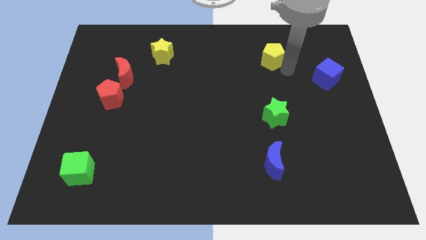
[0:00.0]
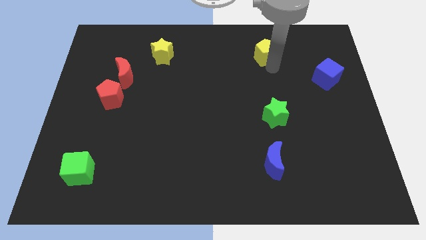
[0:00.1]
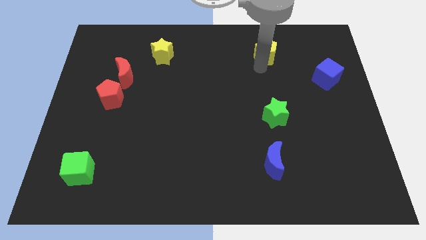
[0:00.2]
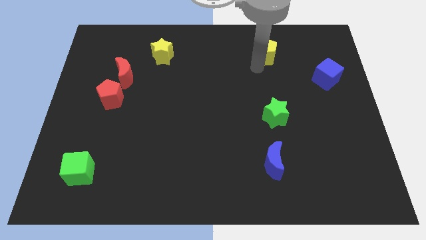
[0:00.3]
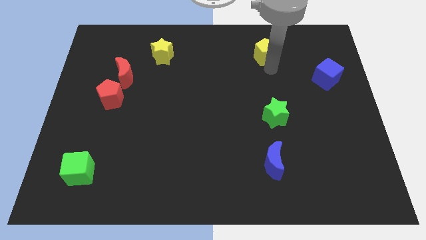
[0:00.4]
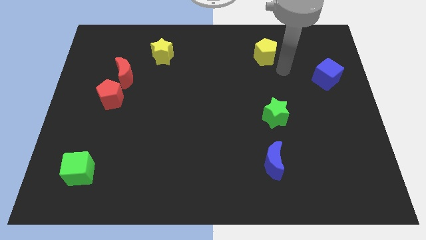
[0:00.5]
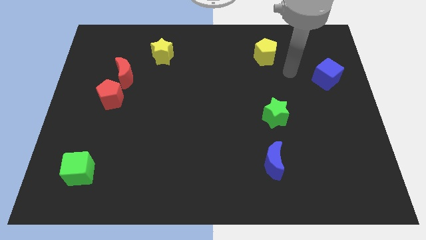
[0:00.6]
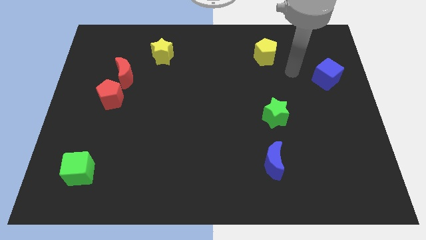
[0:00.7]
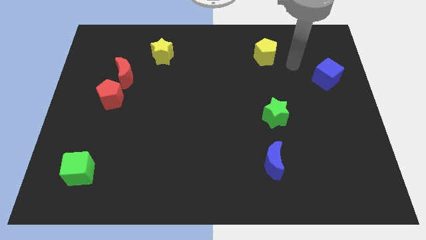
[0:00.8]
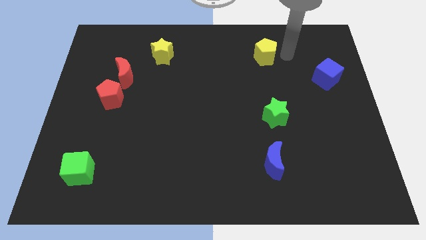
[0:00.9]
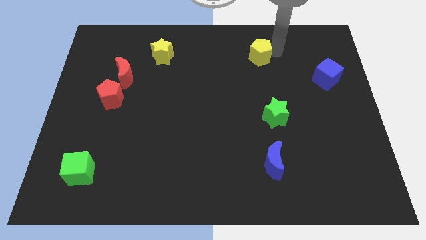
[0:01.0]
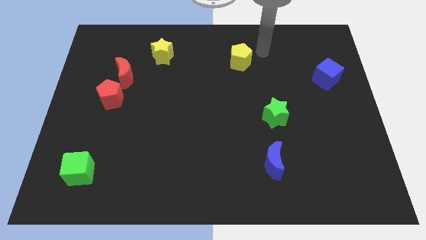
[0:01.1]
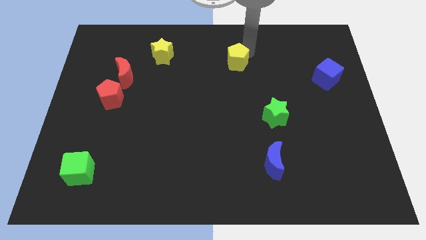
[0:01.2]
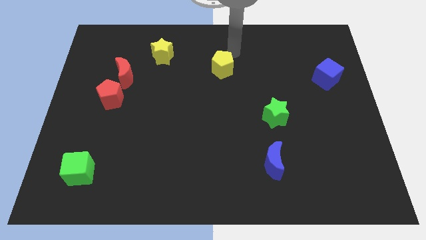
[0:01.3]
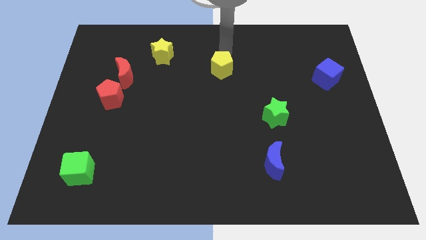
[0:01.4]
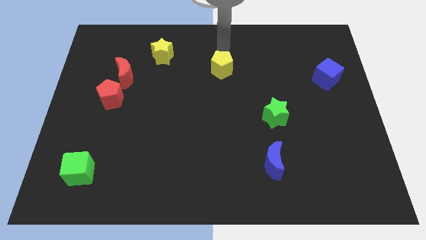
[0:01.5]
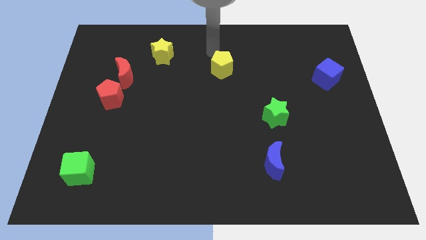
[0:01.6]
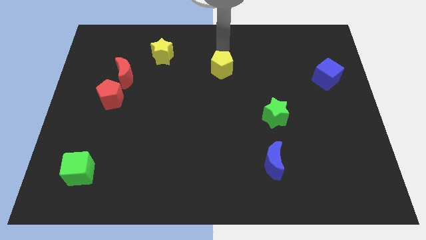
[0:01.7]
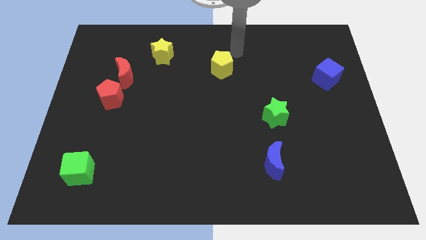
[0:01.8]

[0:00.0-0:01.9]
drag yellow pentagon towards left side of the board

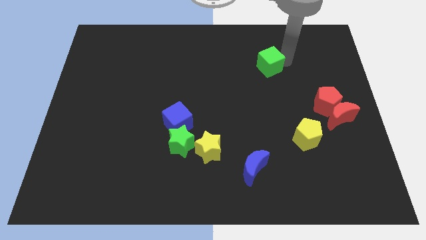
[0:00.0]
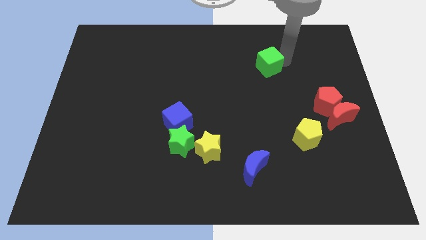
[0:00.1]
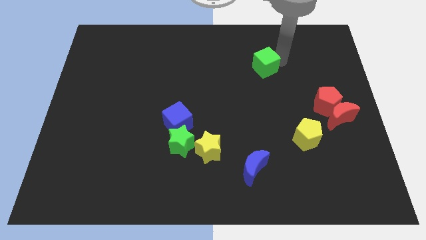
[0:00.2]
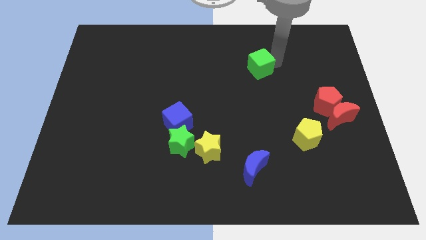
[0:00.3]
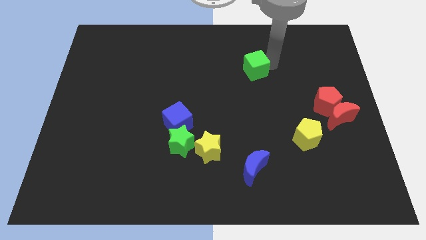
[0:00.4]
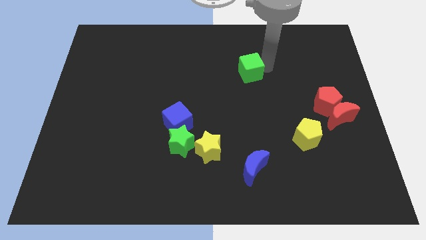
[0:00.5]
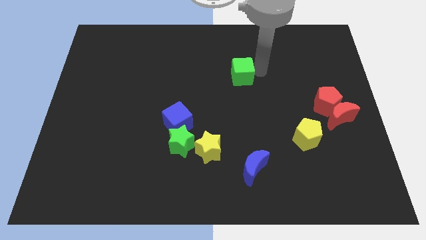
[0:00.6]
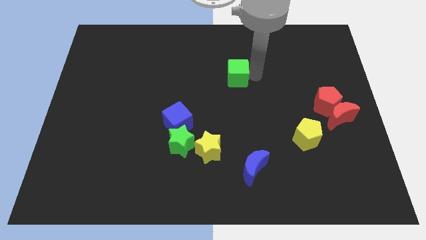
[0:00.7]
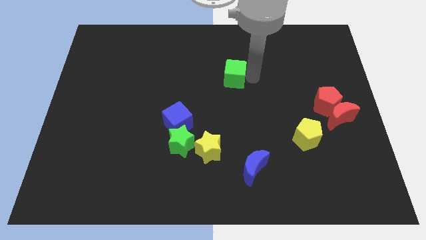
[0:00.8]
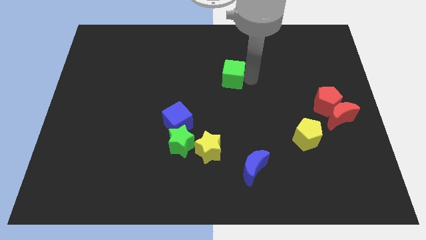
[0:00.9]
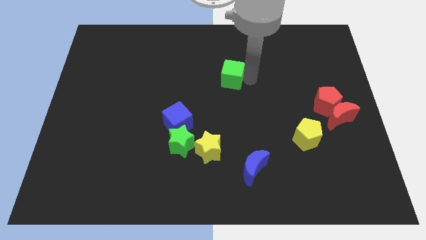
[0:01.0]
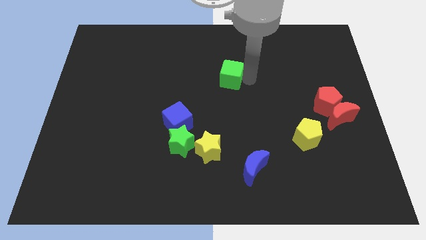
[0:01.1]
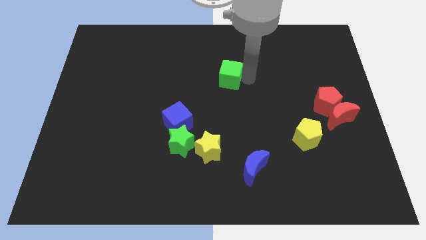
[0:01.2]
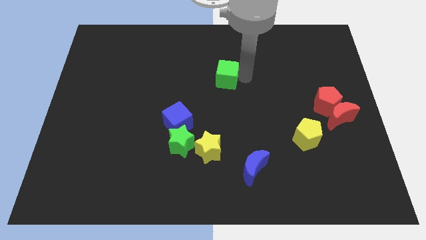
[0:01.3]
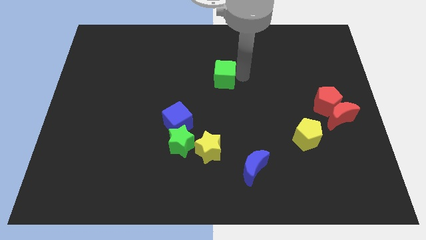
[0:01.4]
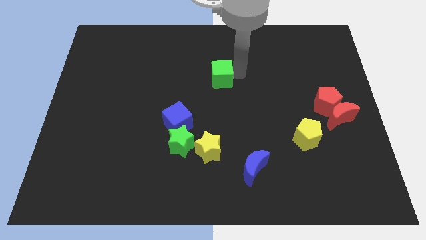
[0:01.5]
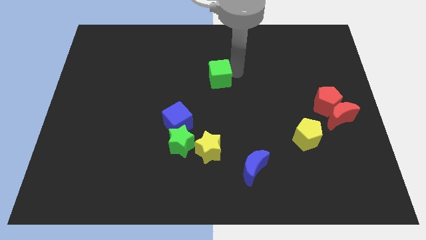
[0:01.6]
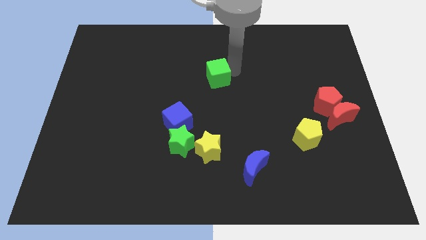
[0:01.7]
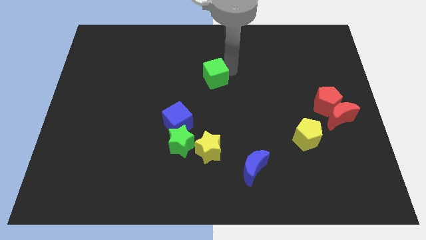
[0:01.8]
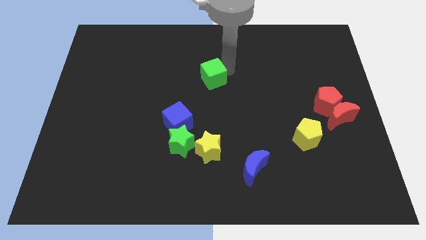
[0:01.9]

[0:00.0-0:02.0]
move green cube diagonally left

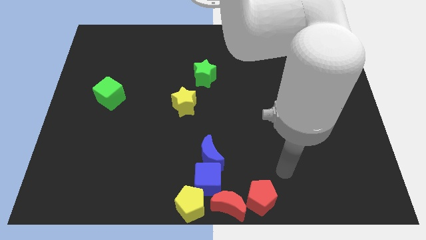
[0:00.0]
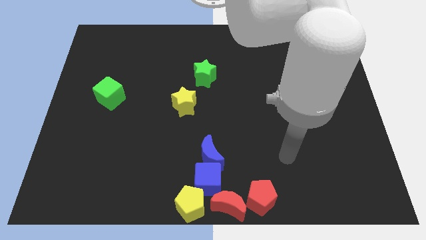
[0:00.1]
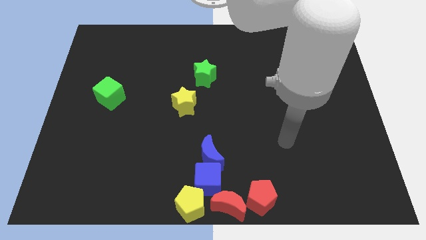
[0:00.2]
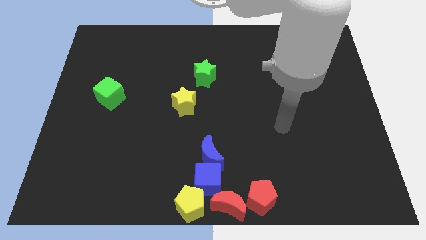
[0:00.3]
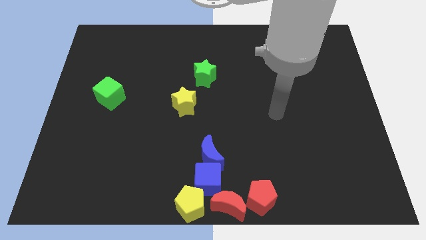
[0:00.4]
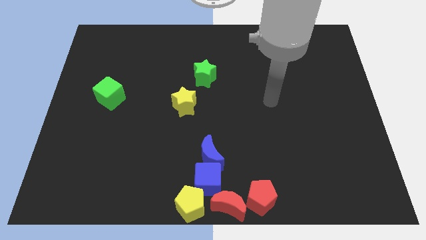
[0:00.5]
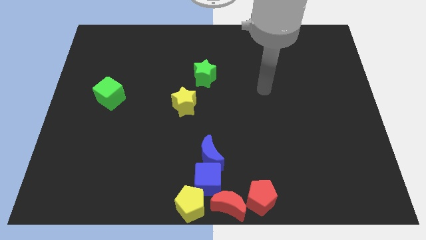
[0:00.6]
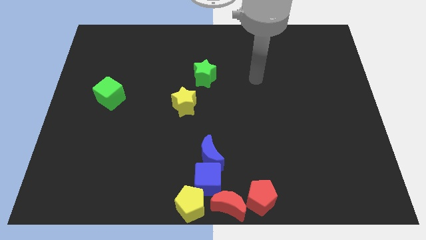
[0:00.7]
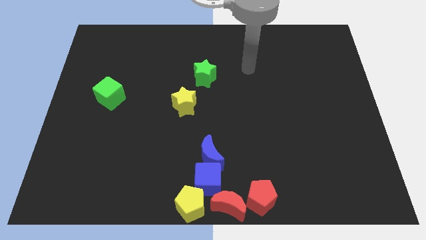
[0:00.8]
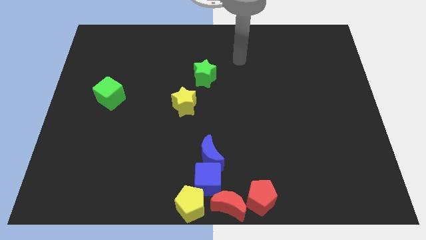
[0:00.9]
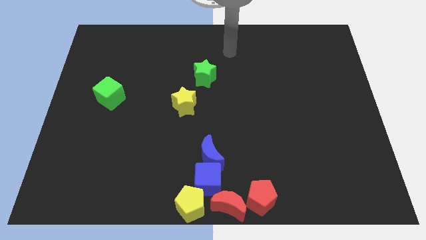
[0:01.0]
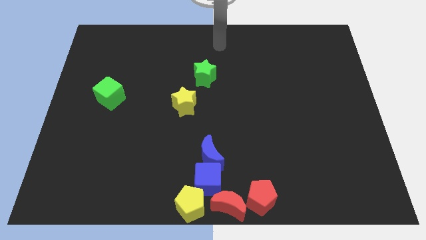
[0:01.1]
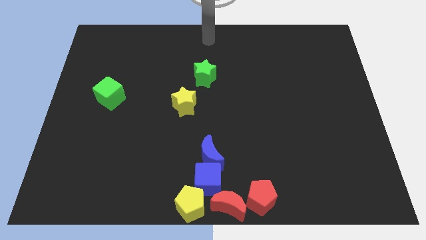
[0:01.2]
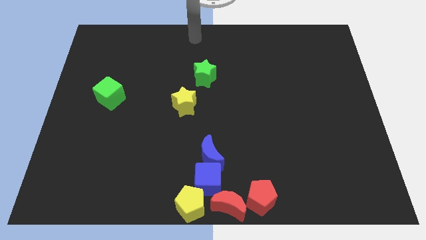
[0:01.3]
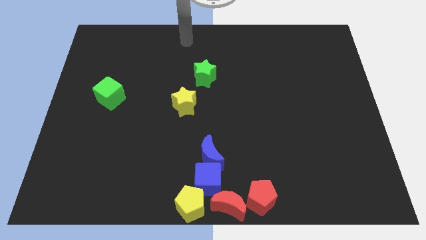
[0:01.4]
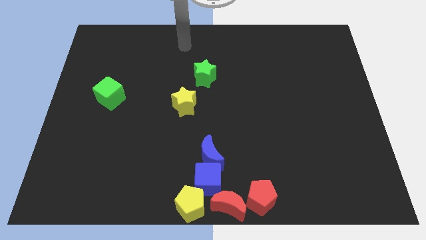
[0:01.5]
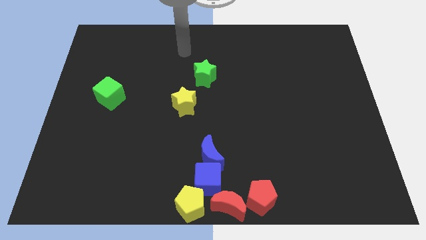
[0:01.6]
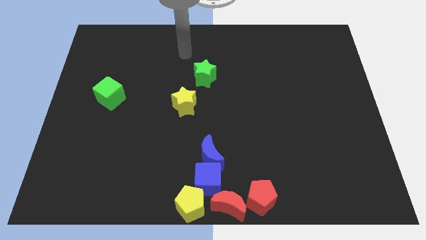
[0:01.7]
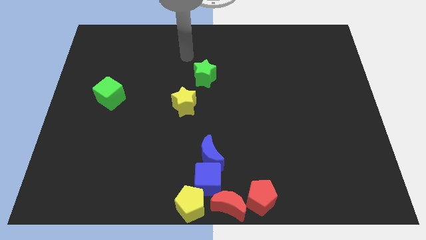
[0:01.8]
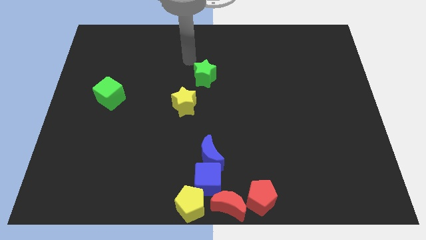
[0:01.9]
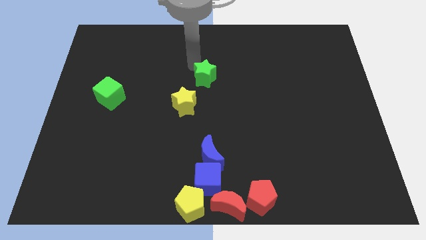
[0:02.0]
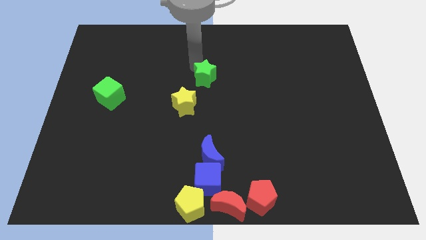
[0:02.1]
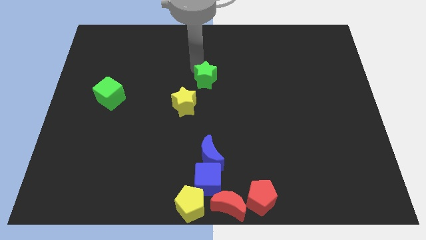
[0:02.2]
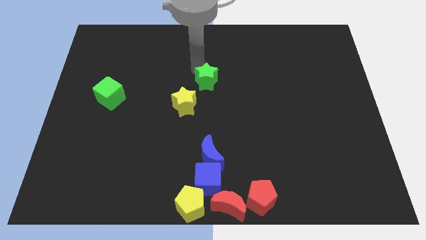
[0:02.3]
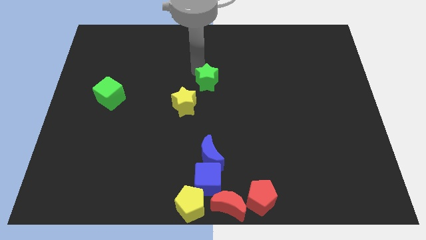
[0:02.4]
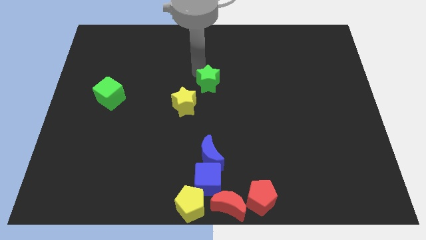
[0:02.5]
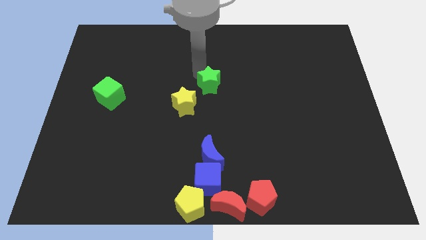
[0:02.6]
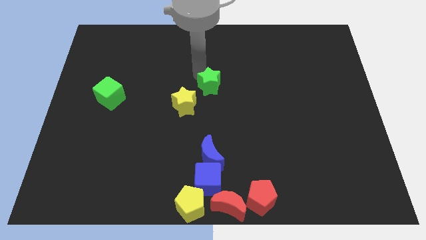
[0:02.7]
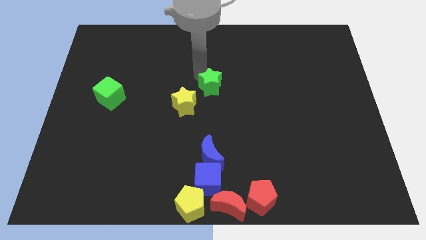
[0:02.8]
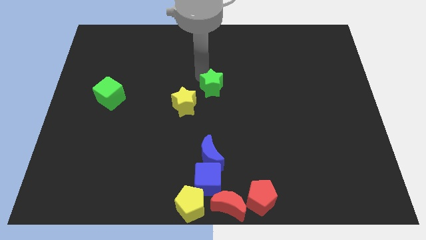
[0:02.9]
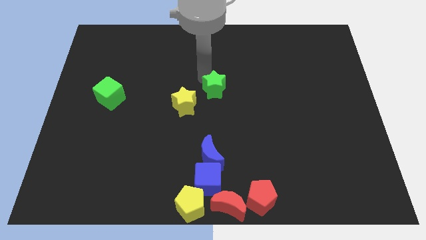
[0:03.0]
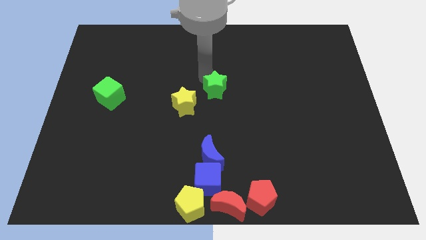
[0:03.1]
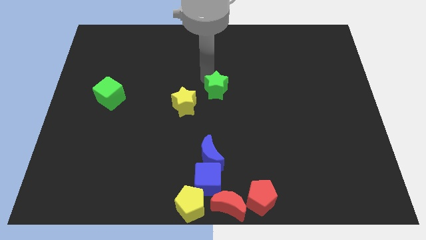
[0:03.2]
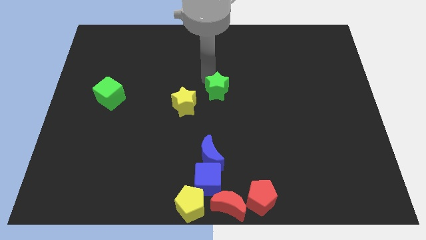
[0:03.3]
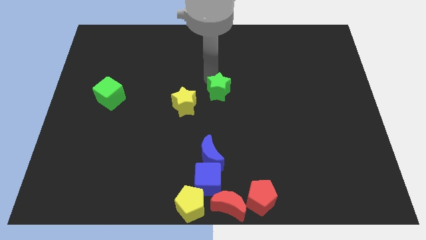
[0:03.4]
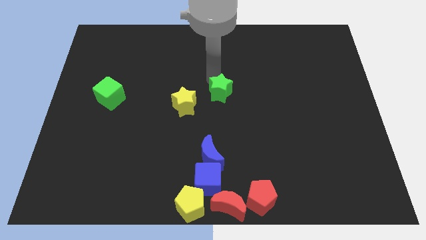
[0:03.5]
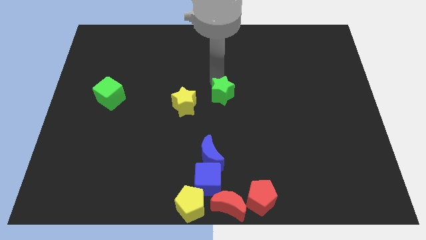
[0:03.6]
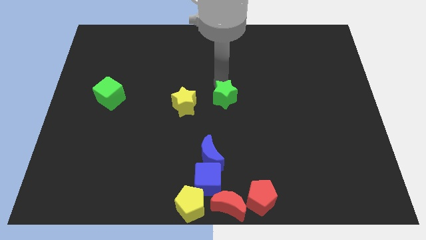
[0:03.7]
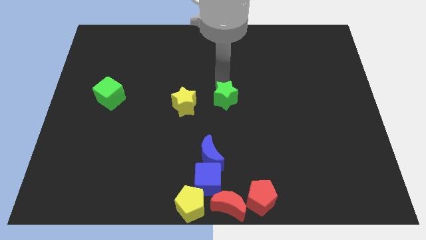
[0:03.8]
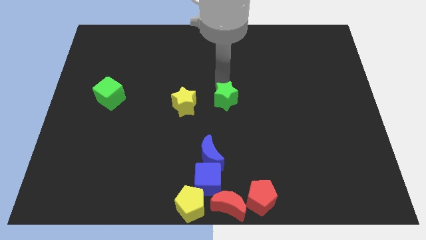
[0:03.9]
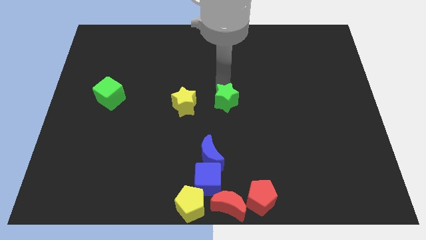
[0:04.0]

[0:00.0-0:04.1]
place the green star to the right of the yellow star

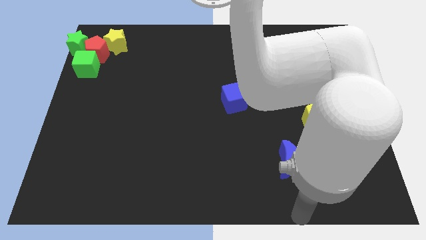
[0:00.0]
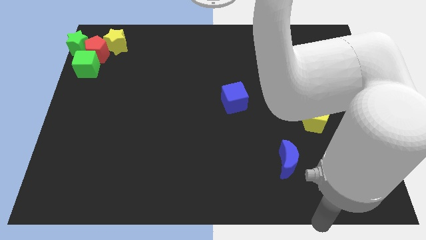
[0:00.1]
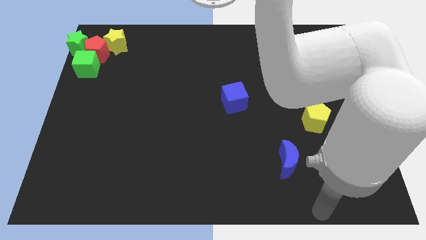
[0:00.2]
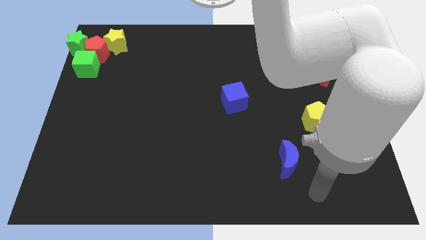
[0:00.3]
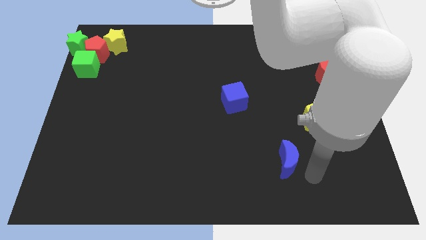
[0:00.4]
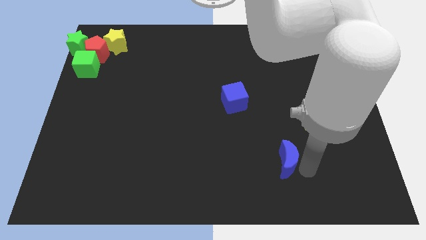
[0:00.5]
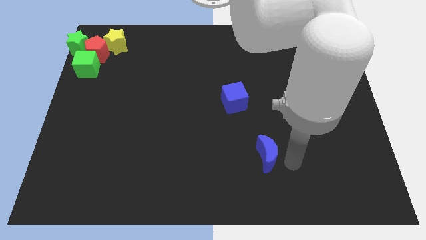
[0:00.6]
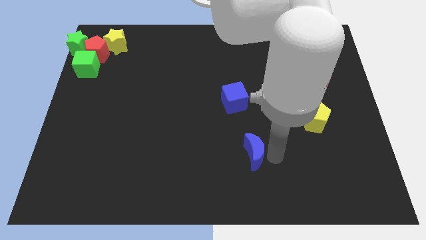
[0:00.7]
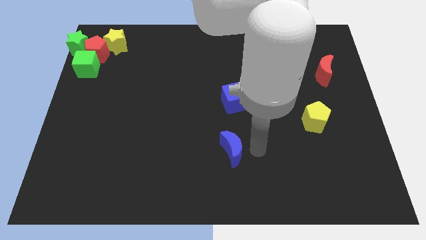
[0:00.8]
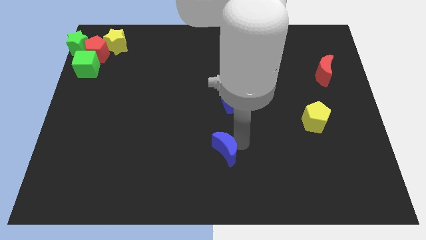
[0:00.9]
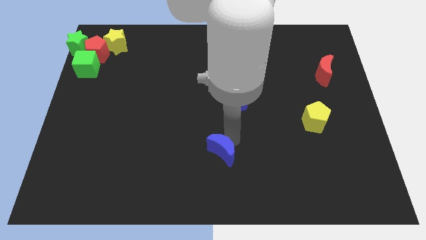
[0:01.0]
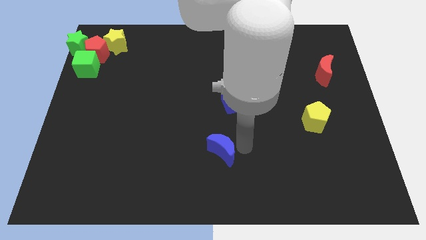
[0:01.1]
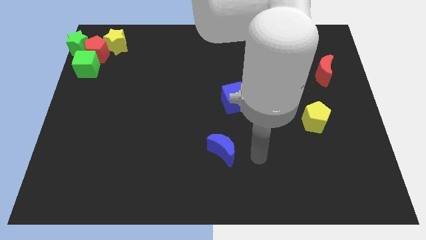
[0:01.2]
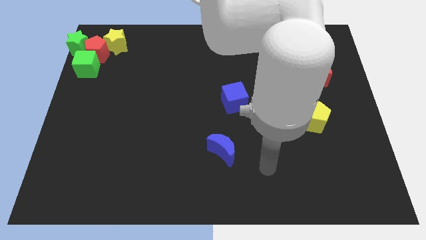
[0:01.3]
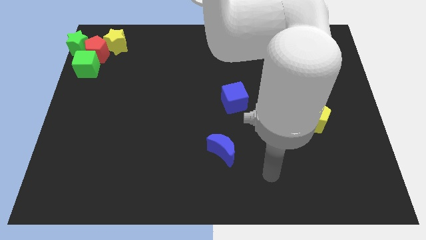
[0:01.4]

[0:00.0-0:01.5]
put the blue moon vertically below the blue cube
